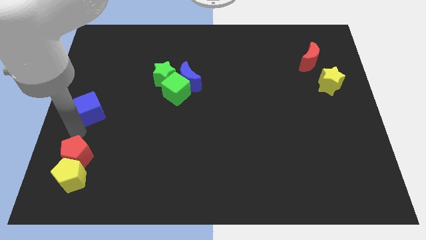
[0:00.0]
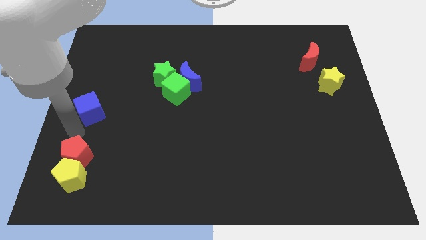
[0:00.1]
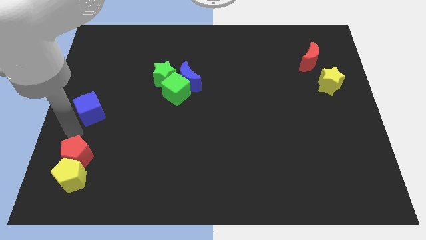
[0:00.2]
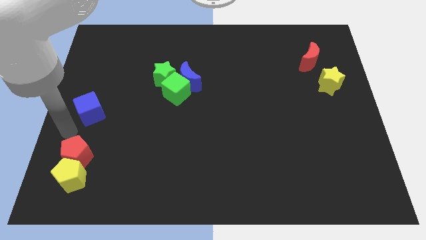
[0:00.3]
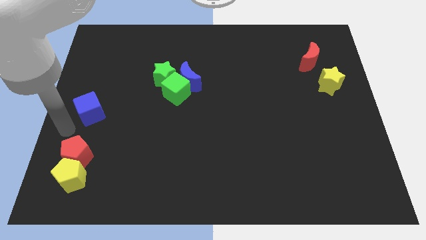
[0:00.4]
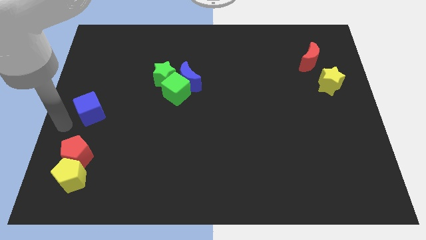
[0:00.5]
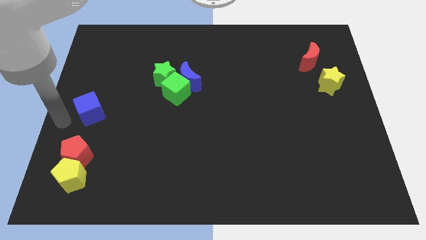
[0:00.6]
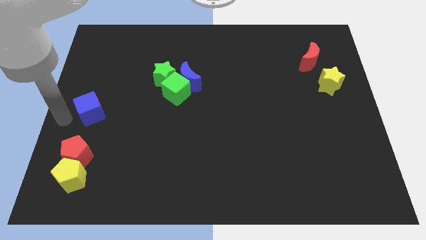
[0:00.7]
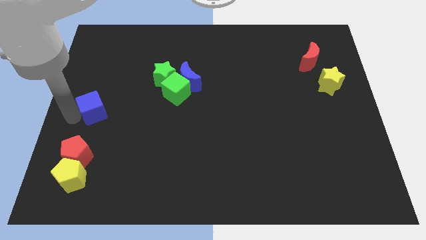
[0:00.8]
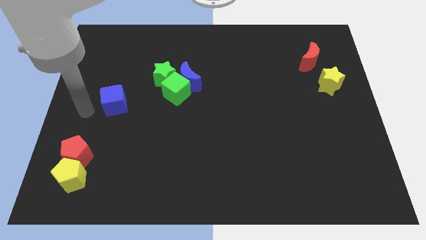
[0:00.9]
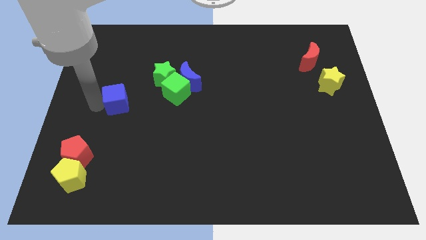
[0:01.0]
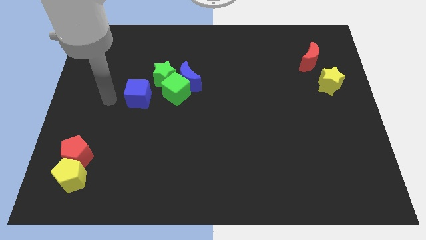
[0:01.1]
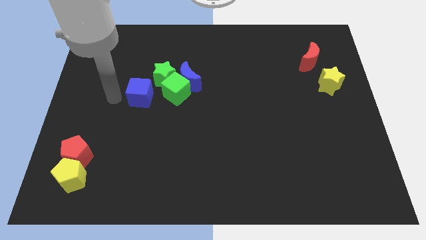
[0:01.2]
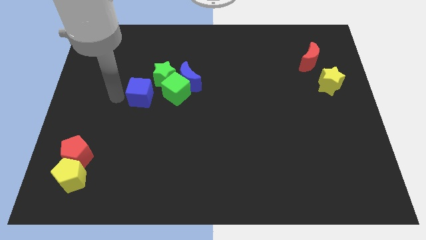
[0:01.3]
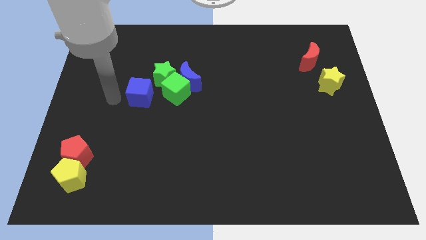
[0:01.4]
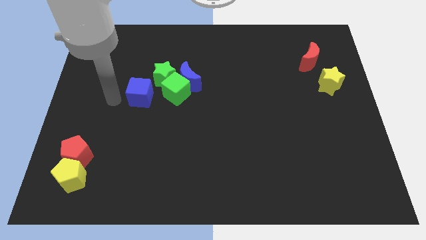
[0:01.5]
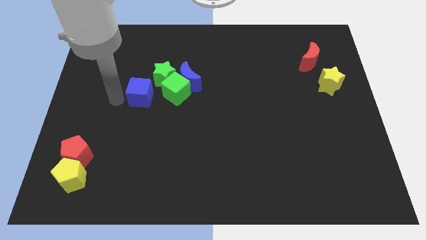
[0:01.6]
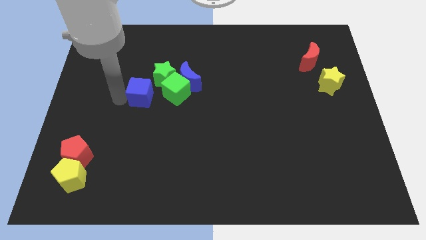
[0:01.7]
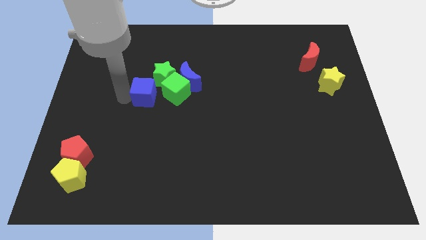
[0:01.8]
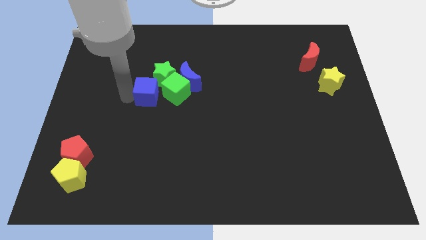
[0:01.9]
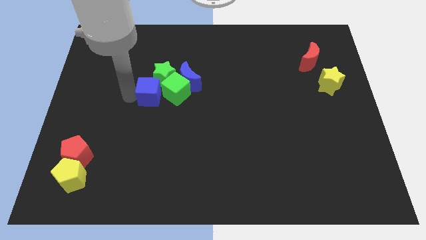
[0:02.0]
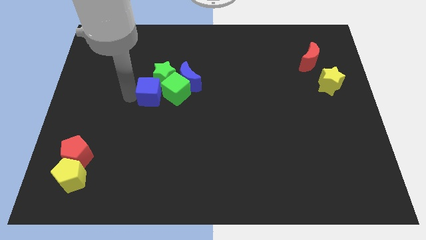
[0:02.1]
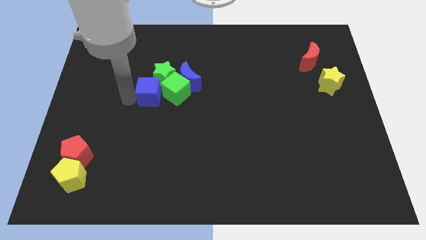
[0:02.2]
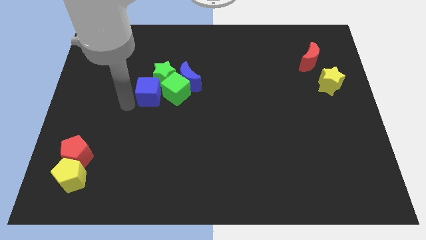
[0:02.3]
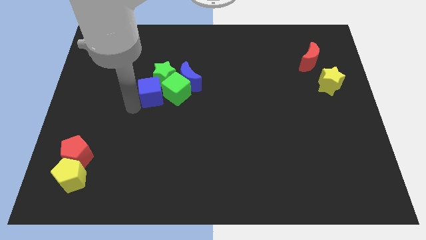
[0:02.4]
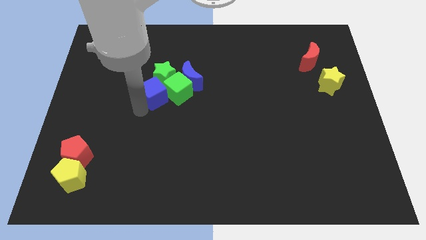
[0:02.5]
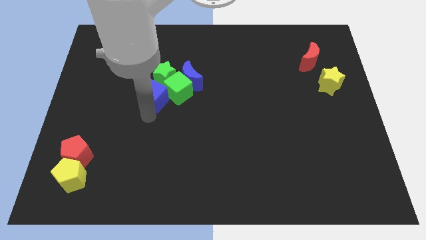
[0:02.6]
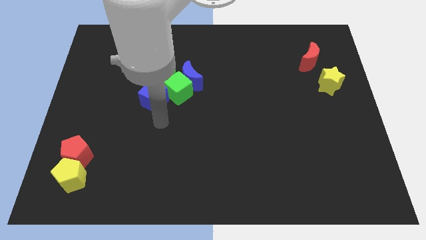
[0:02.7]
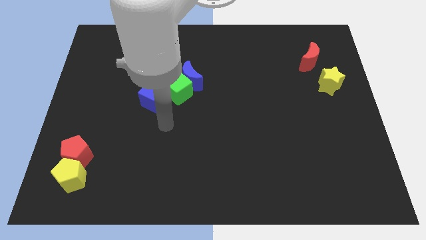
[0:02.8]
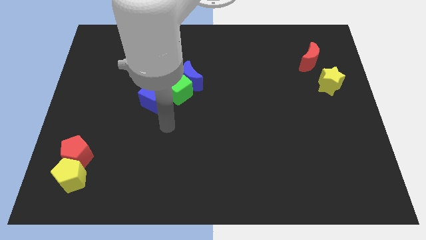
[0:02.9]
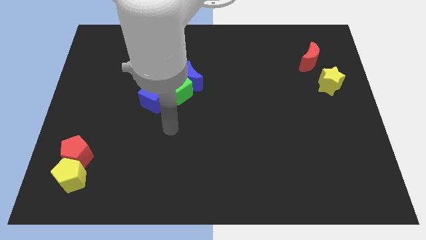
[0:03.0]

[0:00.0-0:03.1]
place the blue cube on the left side of the green cube

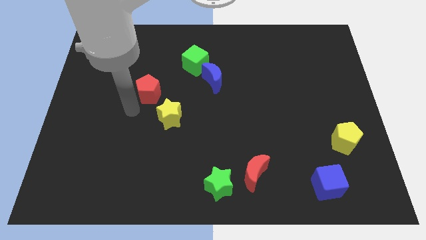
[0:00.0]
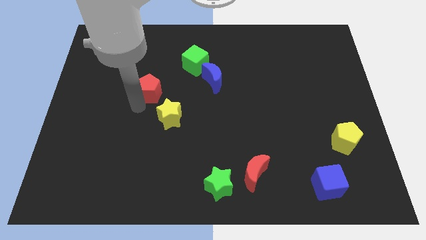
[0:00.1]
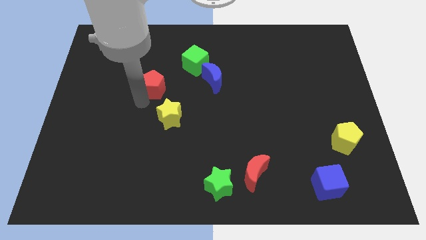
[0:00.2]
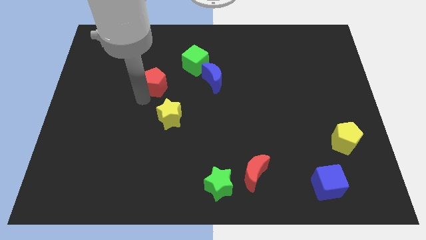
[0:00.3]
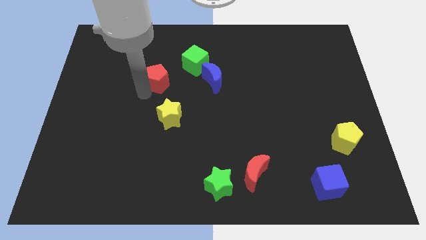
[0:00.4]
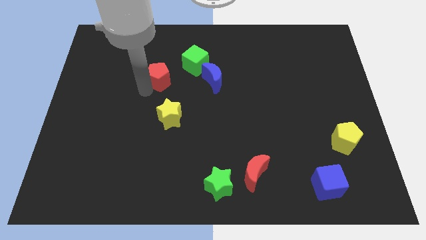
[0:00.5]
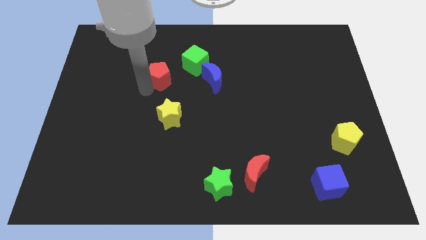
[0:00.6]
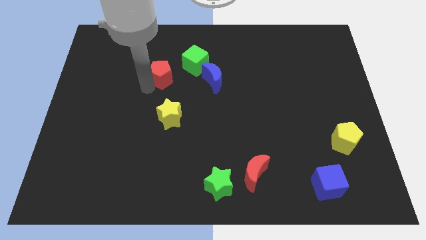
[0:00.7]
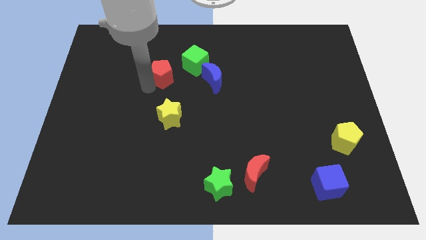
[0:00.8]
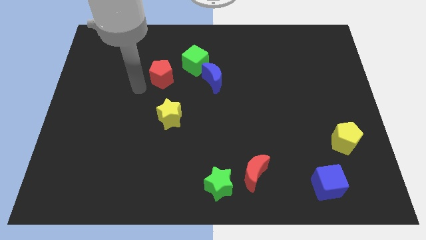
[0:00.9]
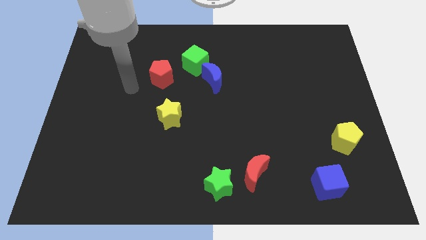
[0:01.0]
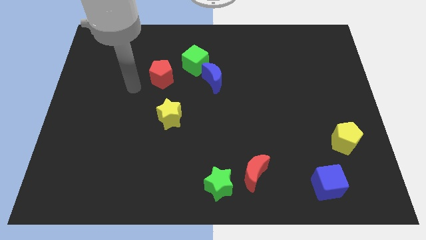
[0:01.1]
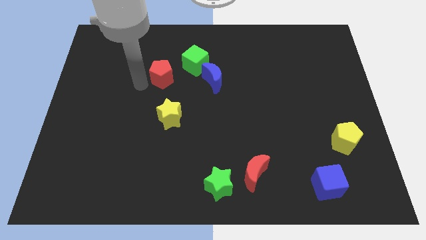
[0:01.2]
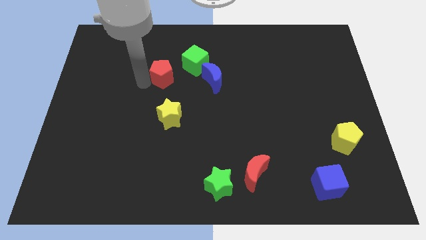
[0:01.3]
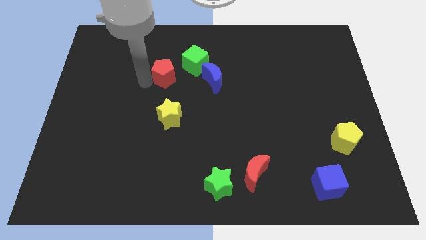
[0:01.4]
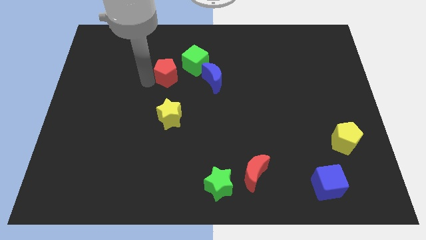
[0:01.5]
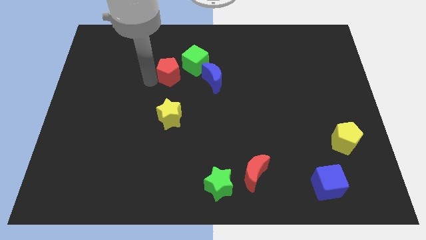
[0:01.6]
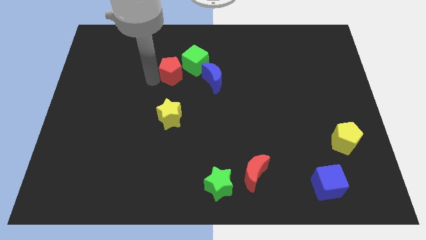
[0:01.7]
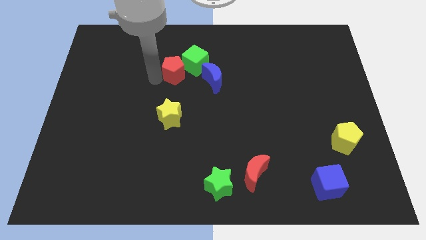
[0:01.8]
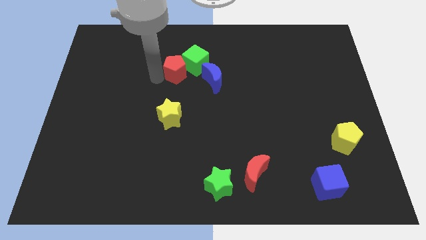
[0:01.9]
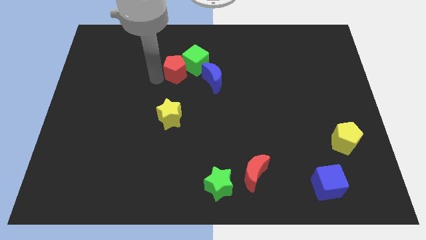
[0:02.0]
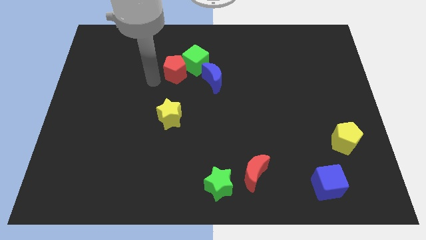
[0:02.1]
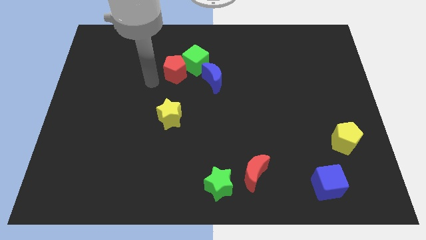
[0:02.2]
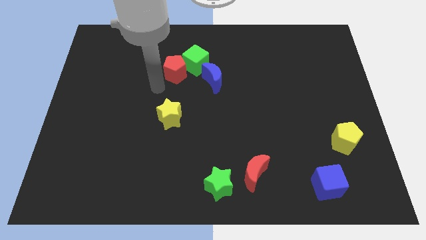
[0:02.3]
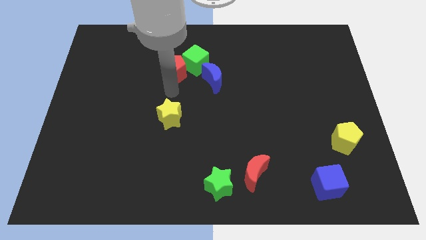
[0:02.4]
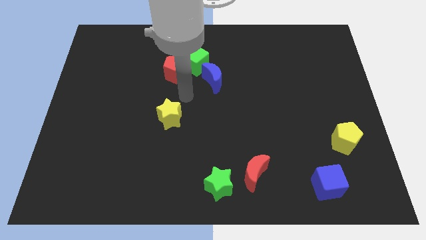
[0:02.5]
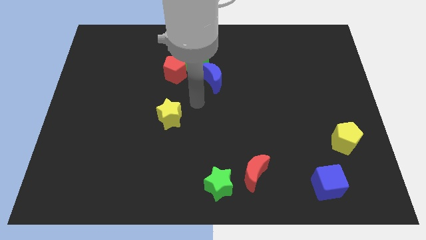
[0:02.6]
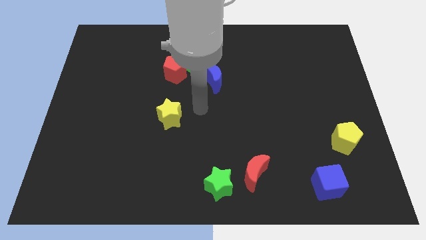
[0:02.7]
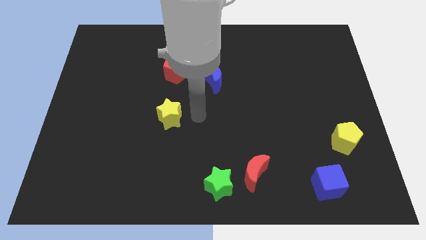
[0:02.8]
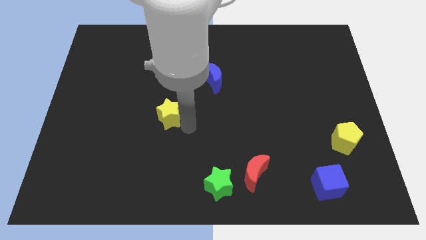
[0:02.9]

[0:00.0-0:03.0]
push red pentagon in to green cube

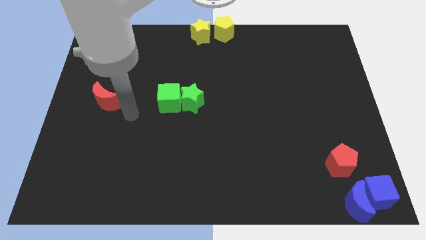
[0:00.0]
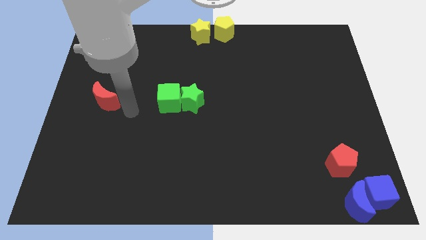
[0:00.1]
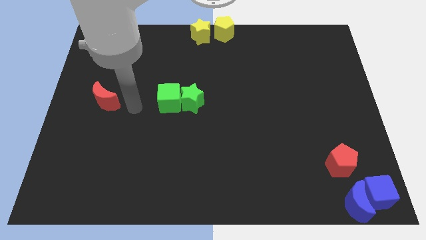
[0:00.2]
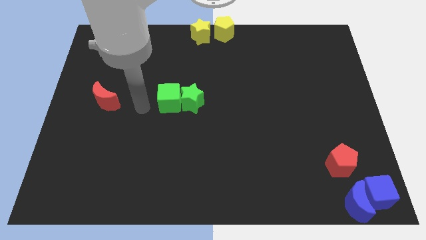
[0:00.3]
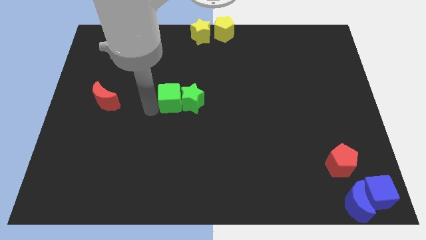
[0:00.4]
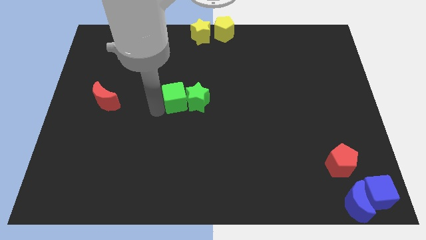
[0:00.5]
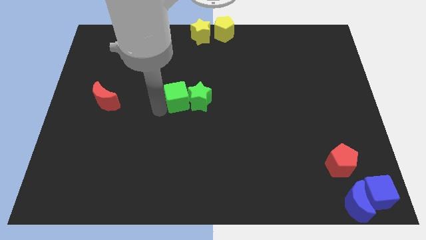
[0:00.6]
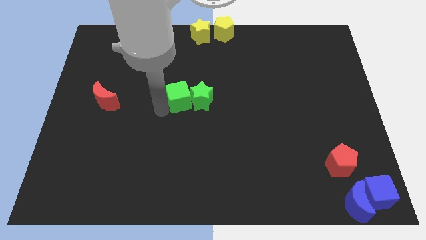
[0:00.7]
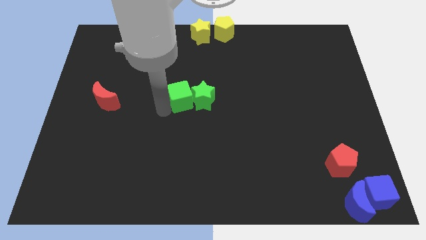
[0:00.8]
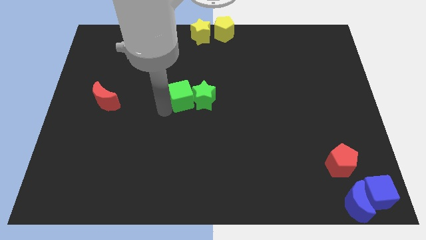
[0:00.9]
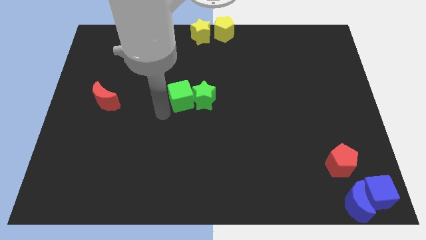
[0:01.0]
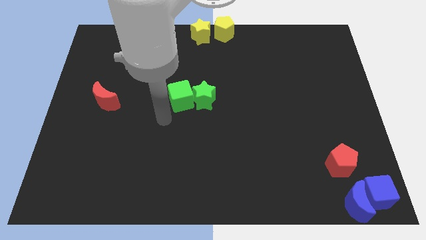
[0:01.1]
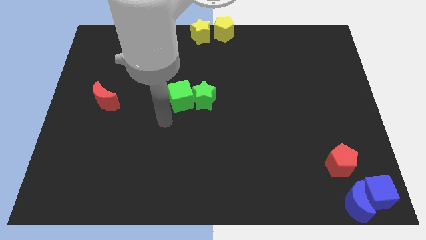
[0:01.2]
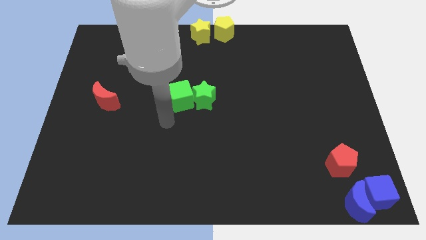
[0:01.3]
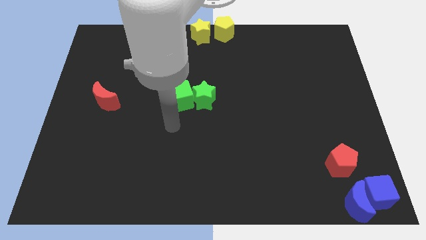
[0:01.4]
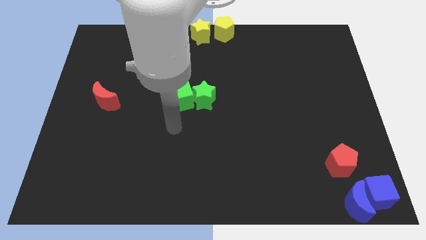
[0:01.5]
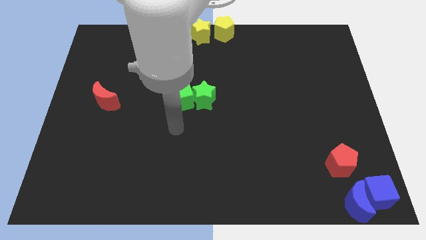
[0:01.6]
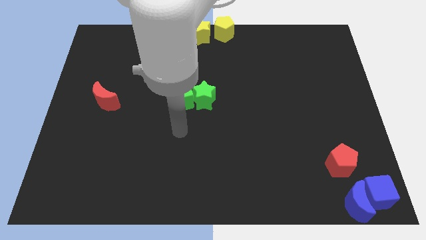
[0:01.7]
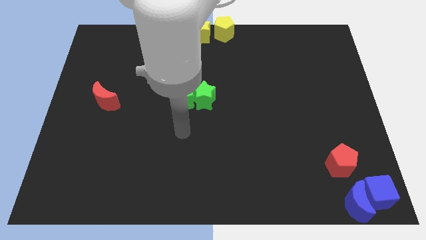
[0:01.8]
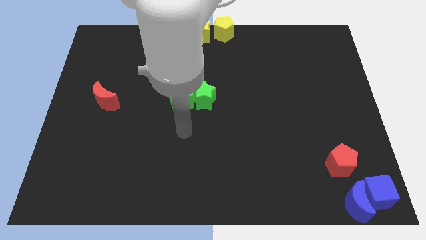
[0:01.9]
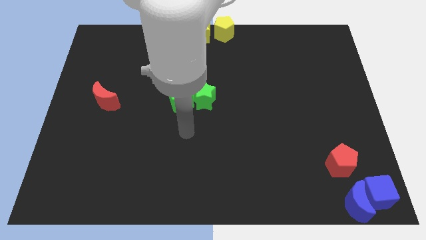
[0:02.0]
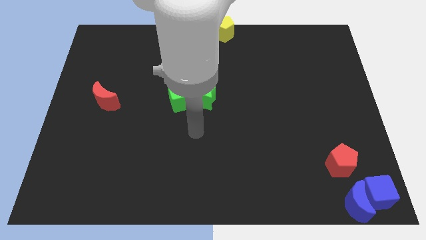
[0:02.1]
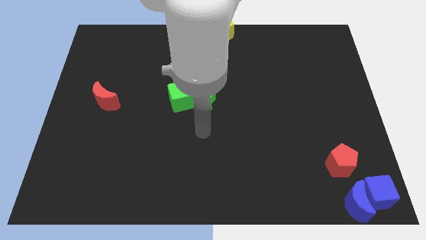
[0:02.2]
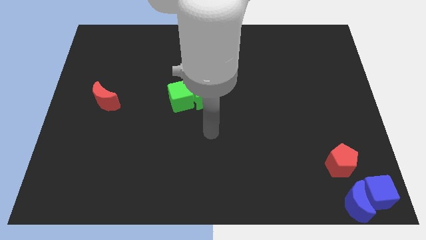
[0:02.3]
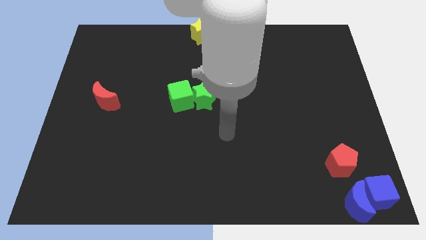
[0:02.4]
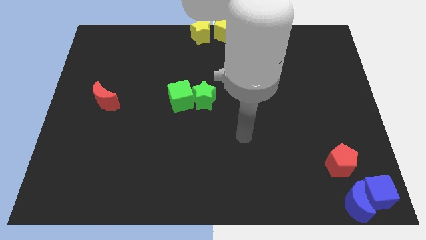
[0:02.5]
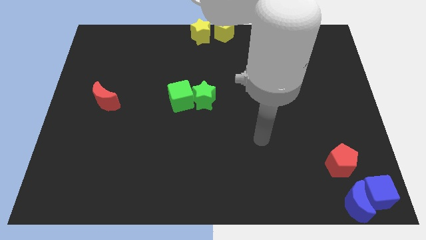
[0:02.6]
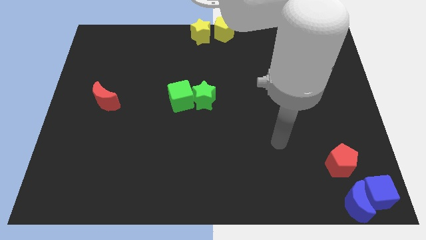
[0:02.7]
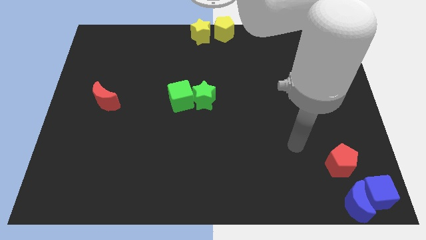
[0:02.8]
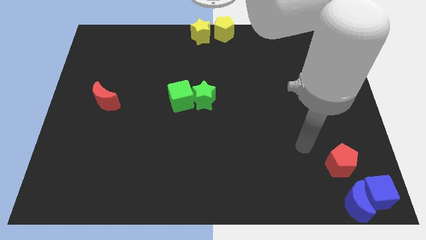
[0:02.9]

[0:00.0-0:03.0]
place the green blocks at the center of the board
